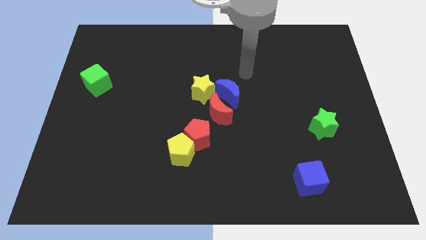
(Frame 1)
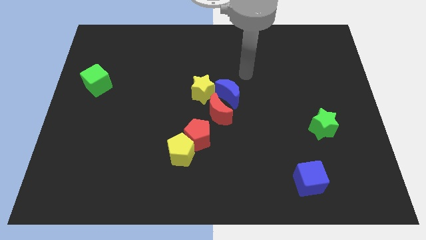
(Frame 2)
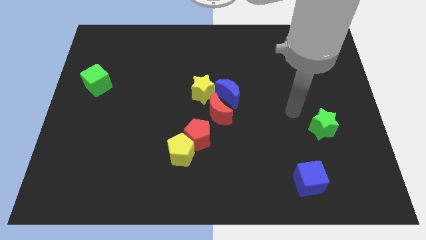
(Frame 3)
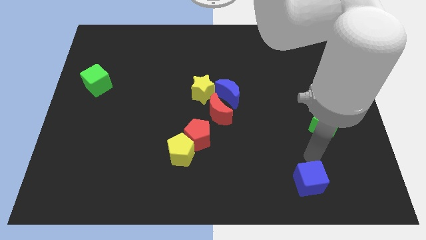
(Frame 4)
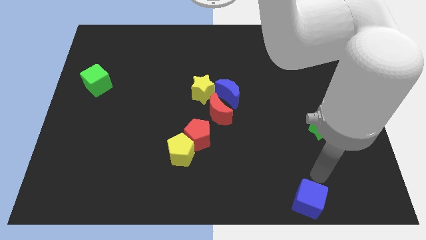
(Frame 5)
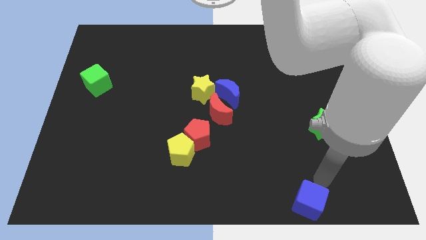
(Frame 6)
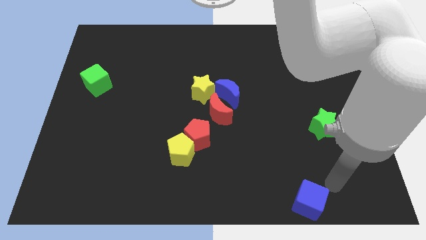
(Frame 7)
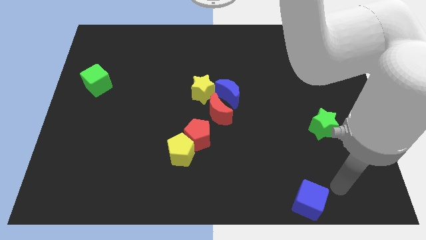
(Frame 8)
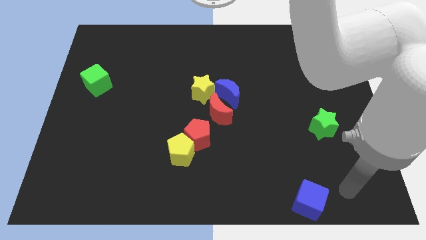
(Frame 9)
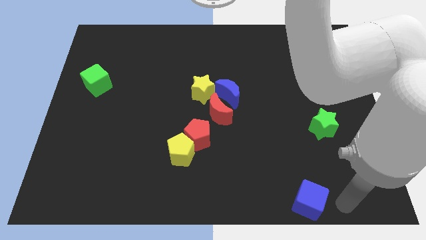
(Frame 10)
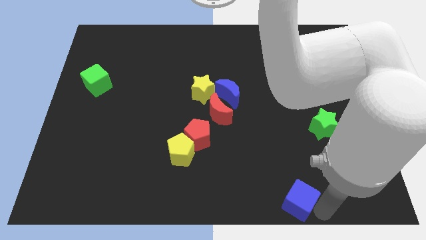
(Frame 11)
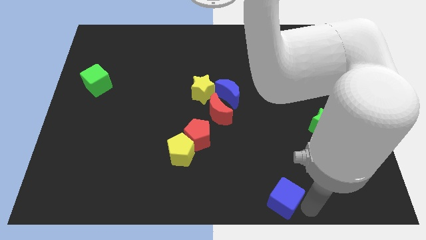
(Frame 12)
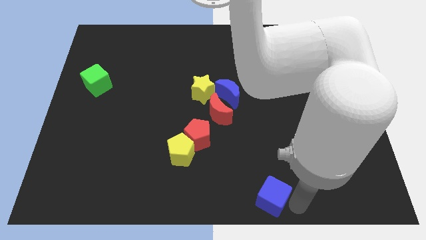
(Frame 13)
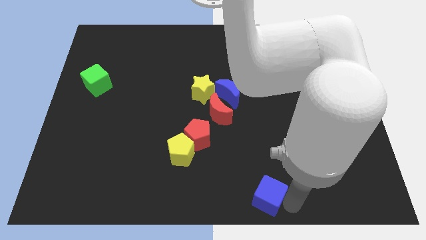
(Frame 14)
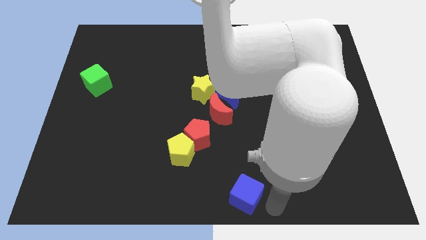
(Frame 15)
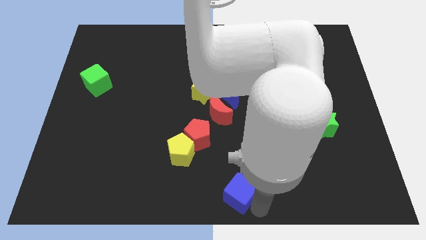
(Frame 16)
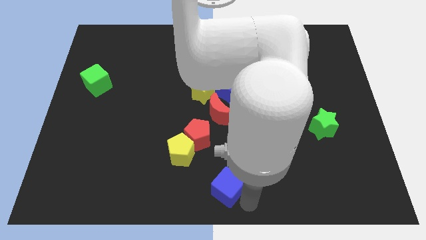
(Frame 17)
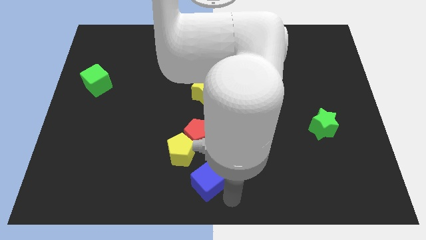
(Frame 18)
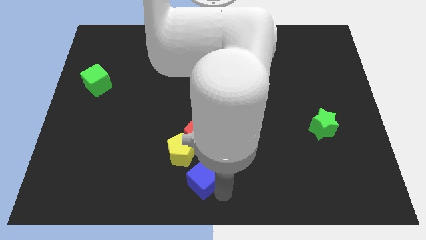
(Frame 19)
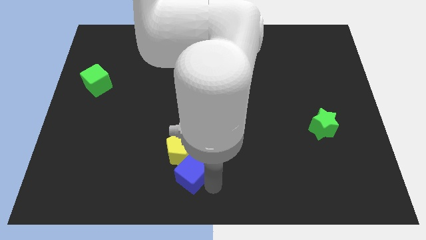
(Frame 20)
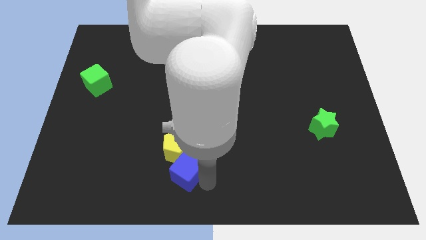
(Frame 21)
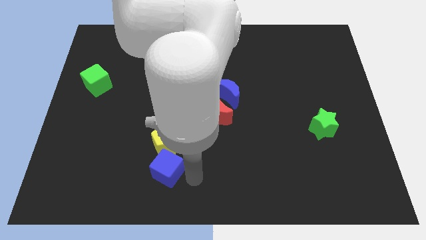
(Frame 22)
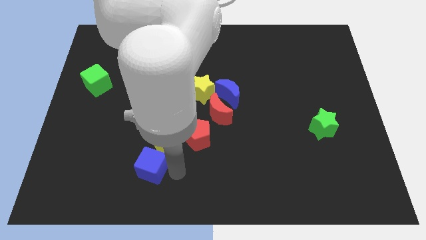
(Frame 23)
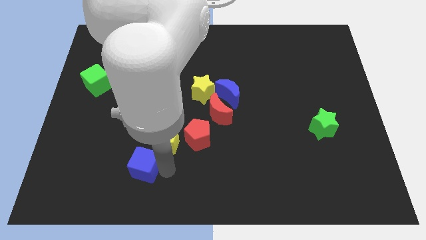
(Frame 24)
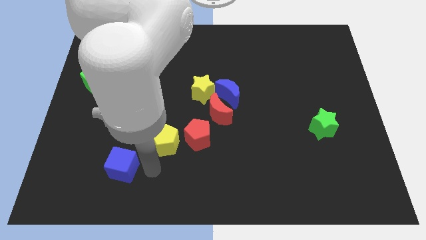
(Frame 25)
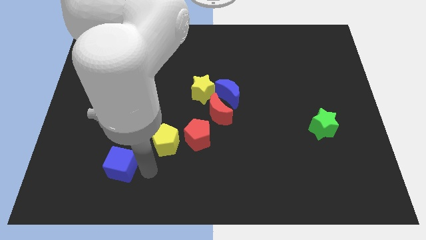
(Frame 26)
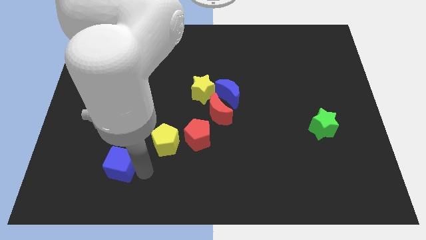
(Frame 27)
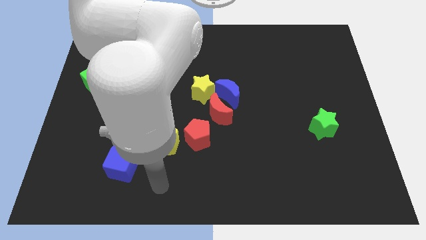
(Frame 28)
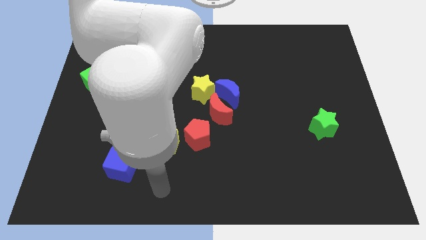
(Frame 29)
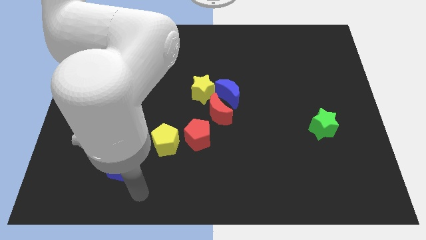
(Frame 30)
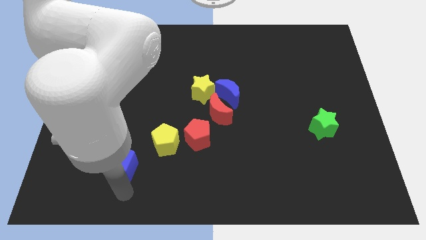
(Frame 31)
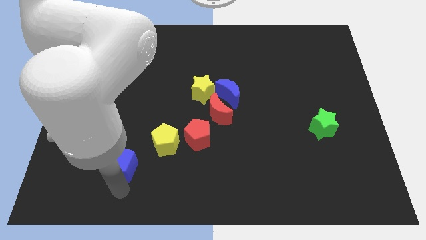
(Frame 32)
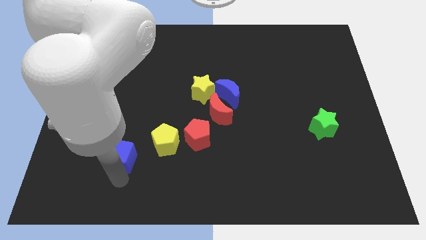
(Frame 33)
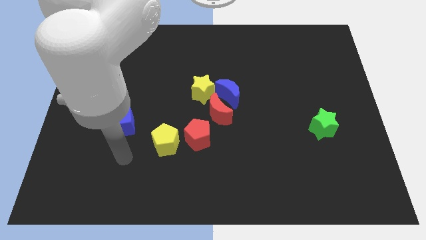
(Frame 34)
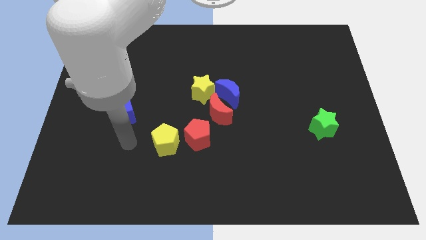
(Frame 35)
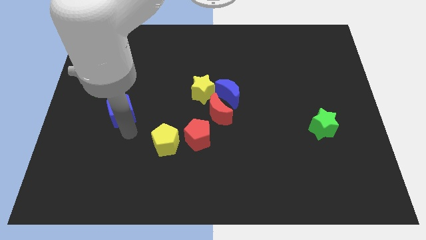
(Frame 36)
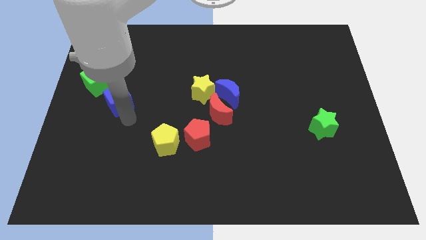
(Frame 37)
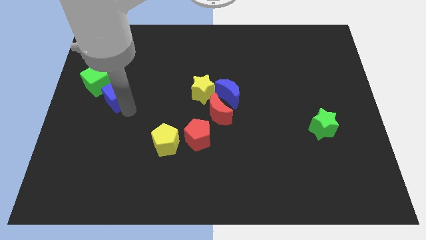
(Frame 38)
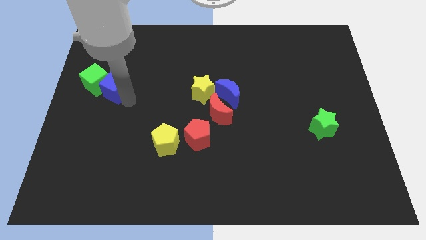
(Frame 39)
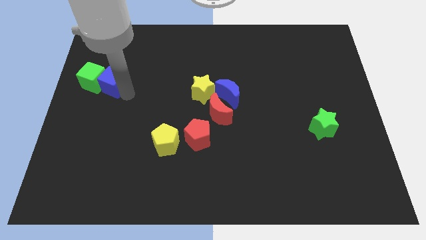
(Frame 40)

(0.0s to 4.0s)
push the blue cube next to the green cube

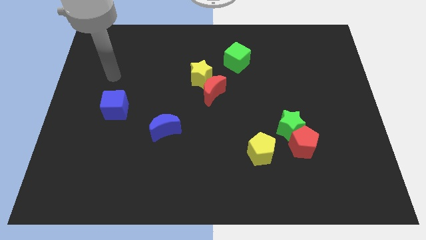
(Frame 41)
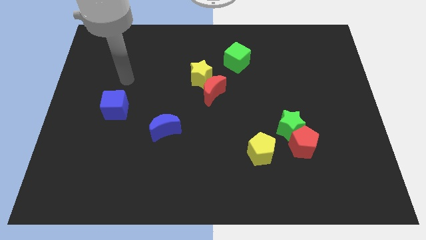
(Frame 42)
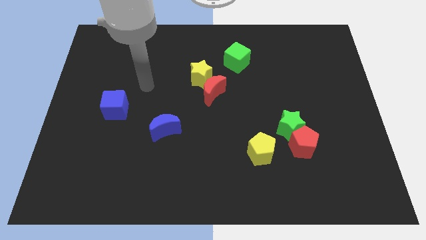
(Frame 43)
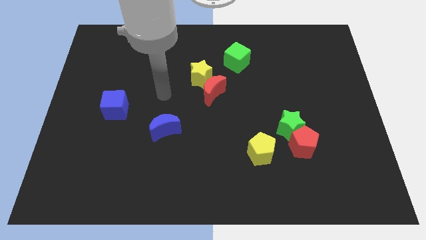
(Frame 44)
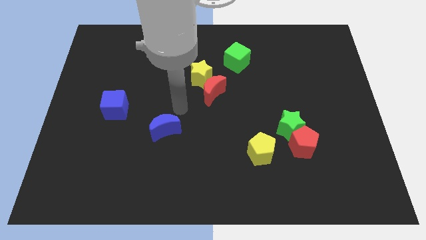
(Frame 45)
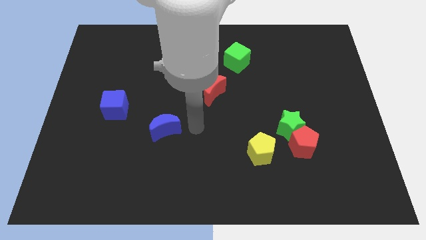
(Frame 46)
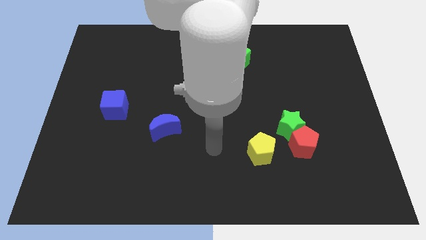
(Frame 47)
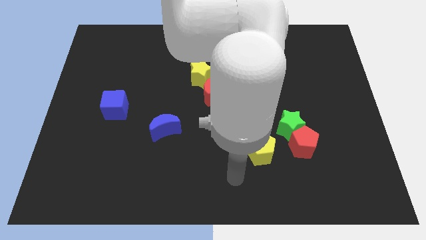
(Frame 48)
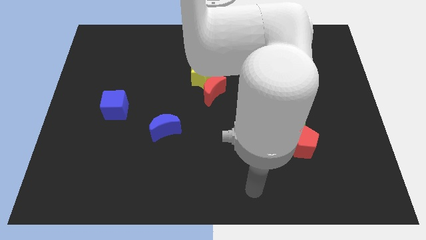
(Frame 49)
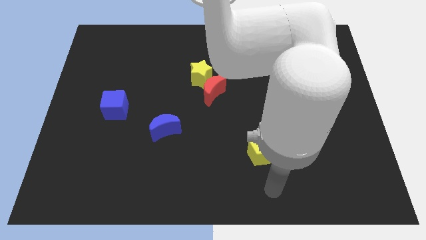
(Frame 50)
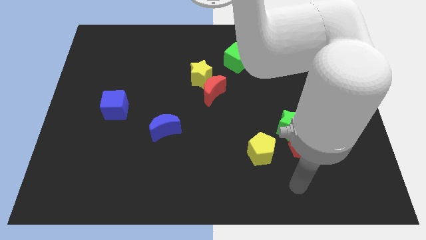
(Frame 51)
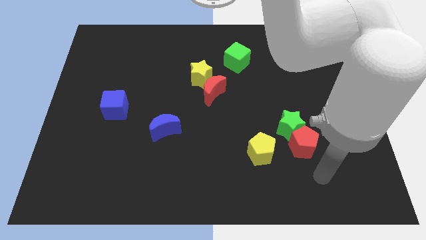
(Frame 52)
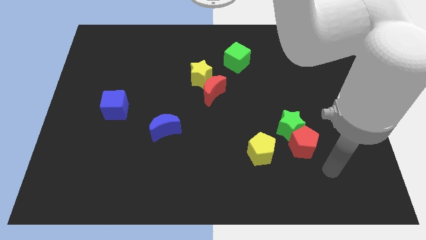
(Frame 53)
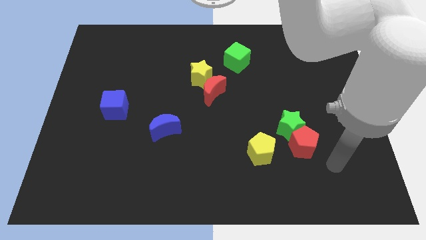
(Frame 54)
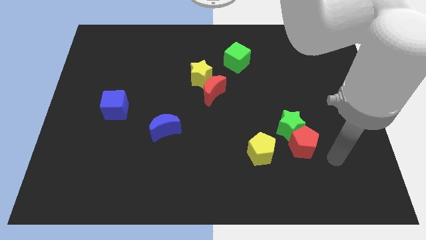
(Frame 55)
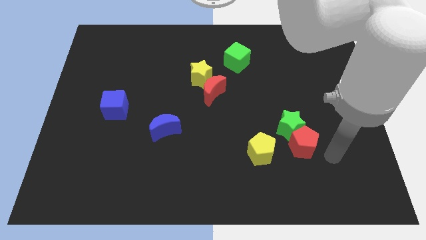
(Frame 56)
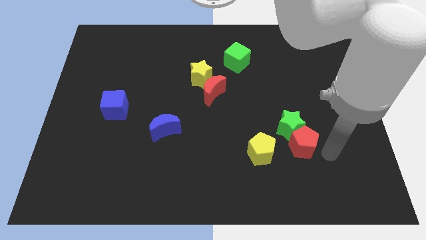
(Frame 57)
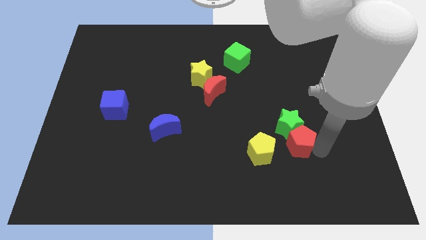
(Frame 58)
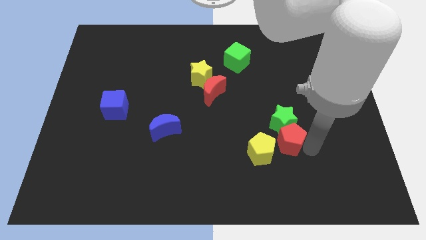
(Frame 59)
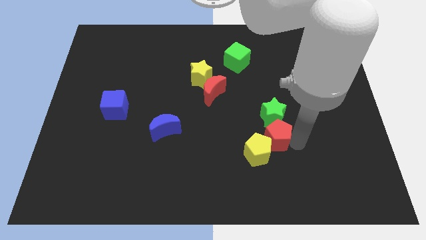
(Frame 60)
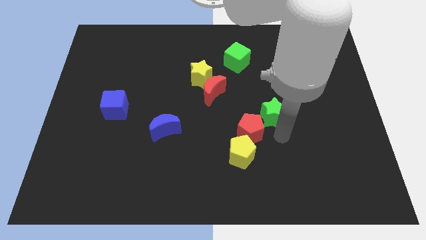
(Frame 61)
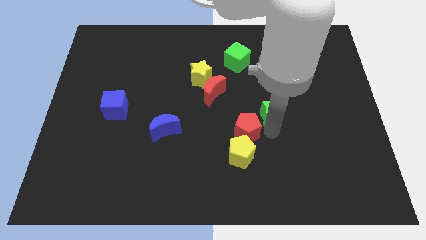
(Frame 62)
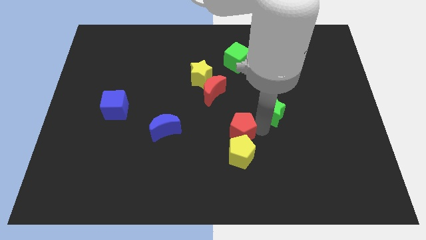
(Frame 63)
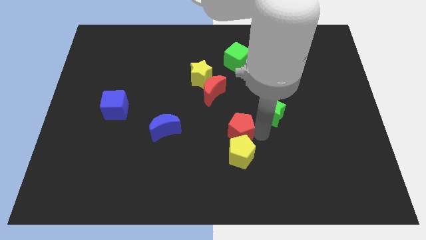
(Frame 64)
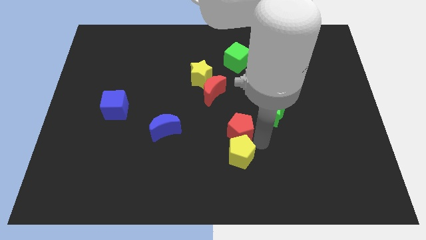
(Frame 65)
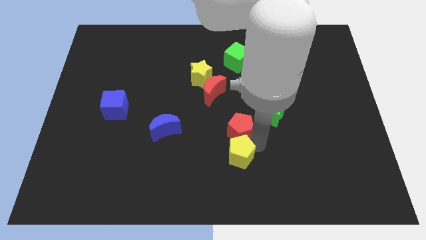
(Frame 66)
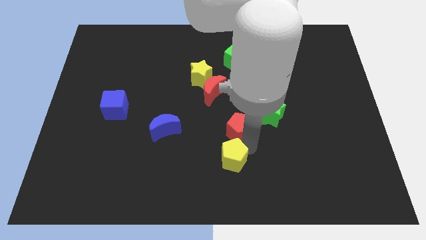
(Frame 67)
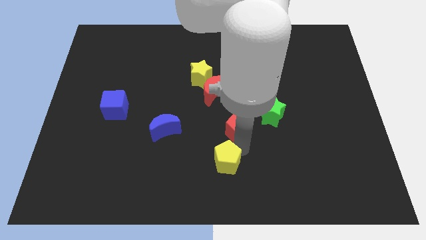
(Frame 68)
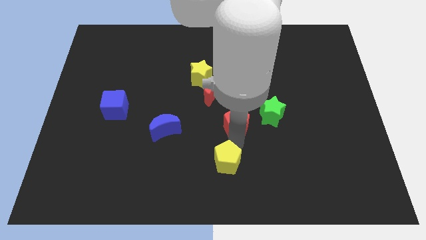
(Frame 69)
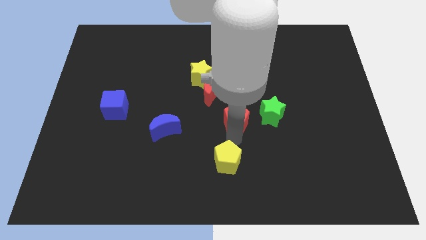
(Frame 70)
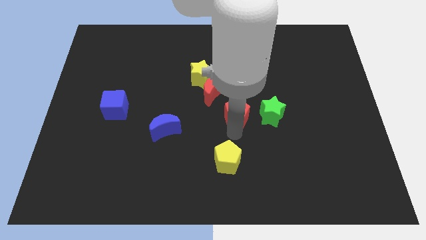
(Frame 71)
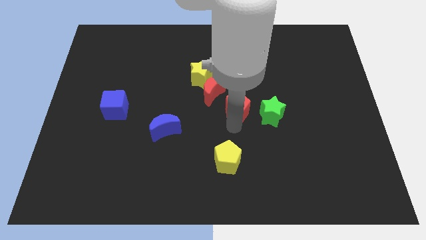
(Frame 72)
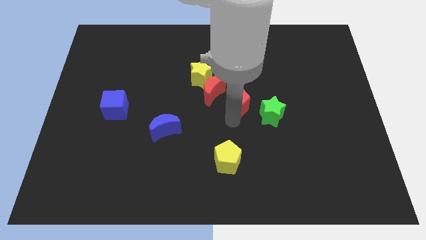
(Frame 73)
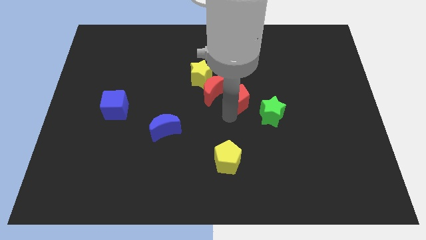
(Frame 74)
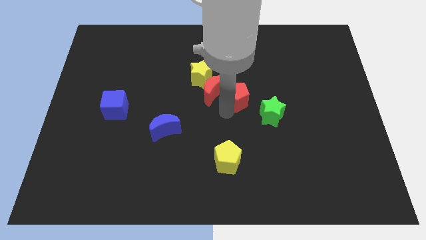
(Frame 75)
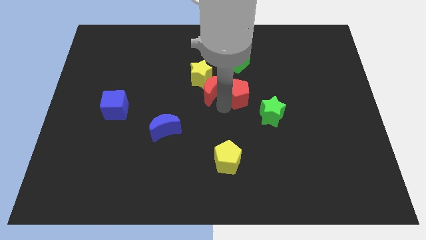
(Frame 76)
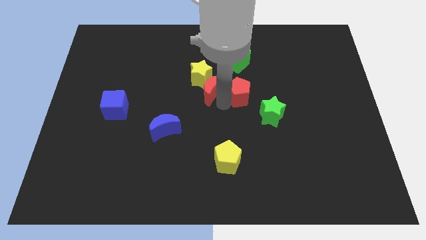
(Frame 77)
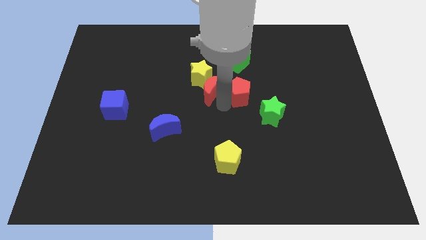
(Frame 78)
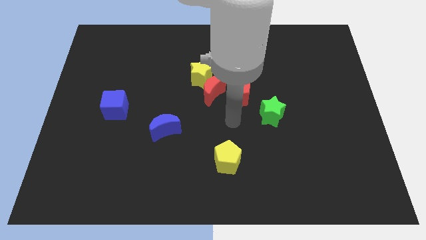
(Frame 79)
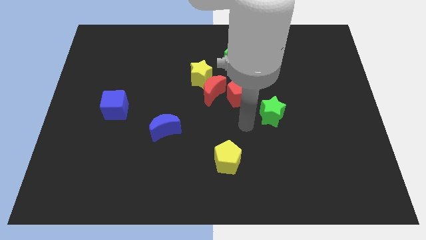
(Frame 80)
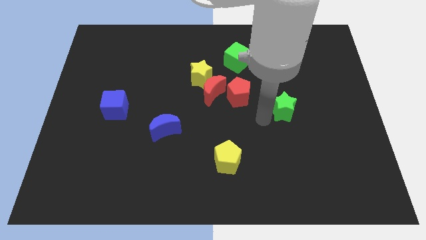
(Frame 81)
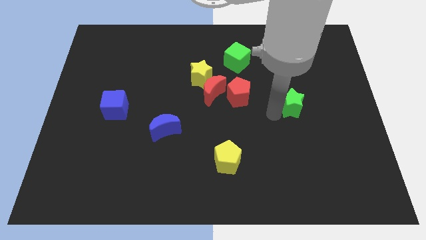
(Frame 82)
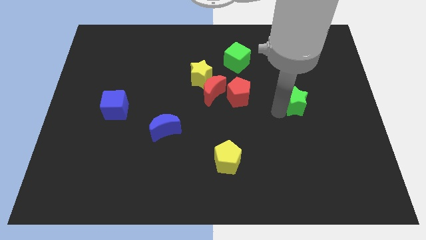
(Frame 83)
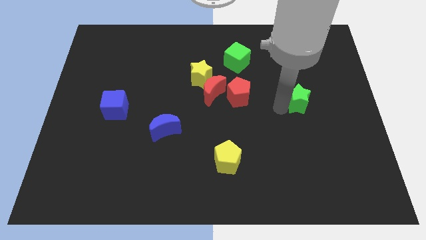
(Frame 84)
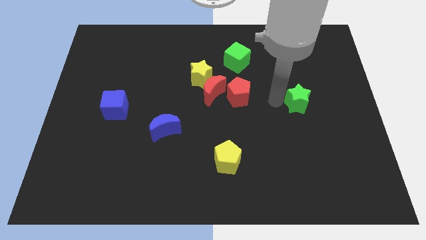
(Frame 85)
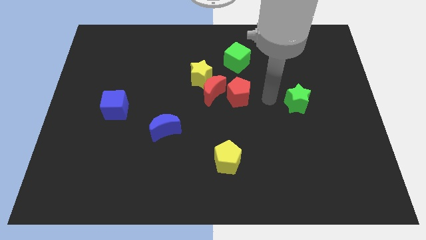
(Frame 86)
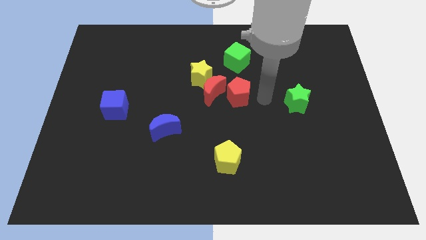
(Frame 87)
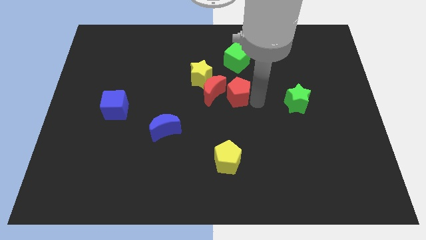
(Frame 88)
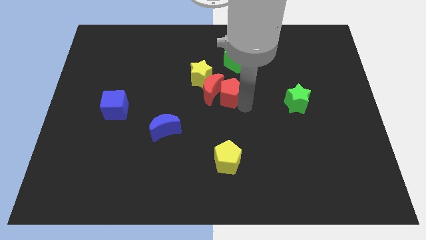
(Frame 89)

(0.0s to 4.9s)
push the red pentagon to the red moon
